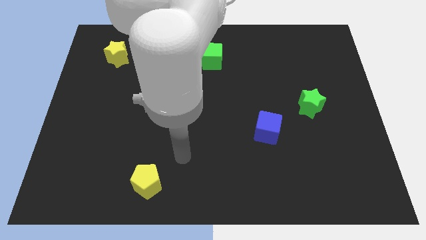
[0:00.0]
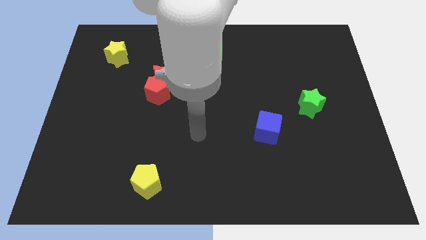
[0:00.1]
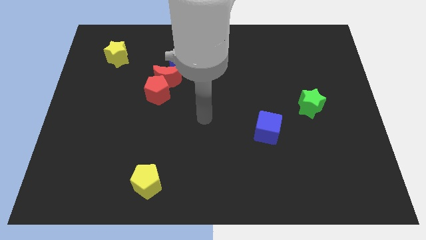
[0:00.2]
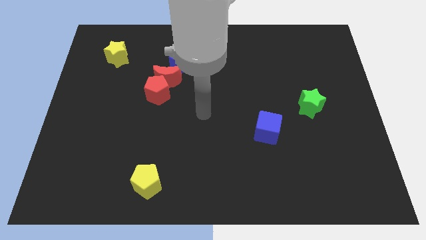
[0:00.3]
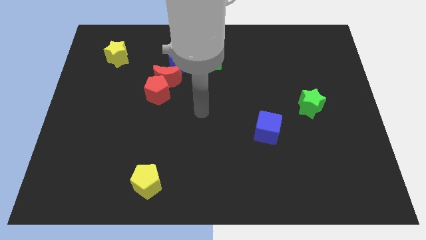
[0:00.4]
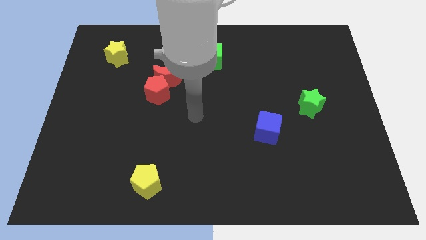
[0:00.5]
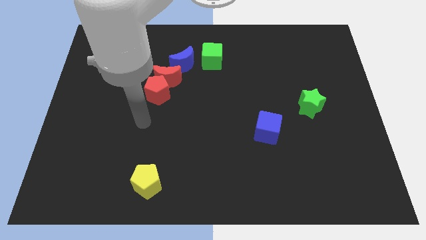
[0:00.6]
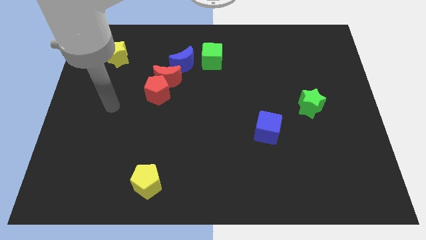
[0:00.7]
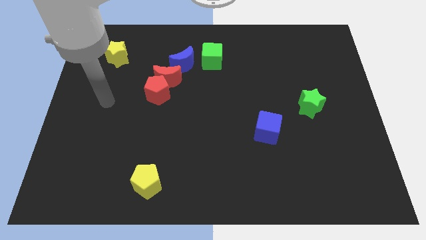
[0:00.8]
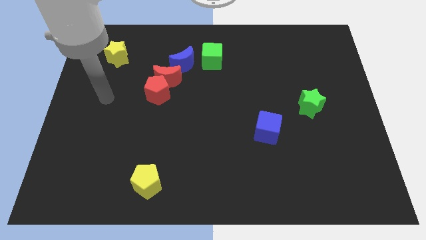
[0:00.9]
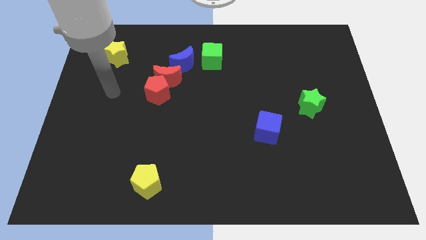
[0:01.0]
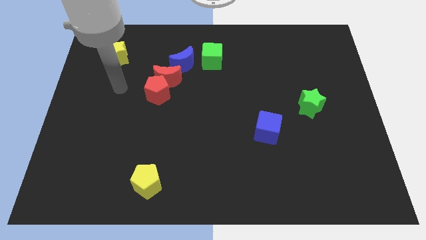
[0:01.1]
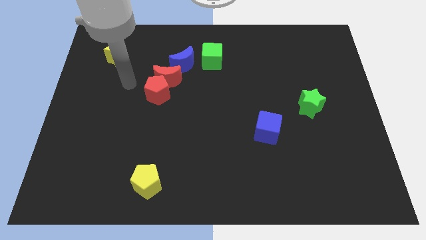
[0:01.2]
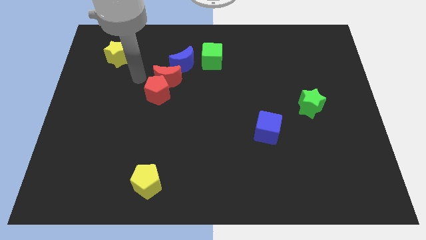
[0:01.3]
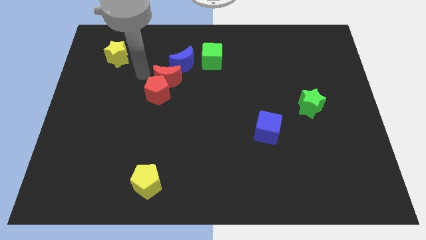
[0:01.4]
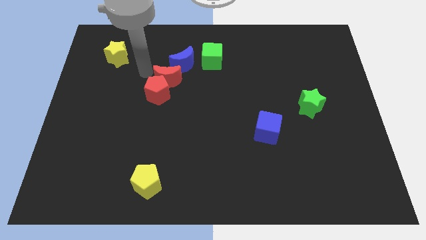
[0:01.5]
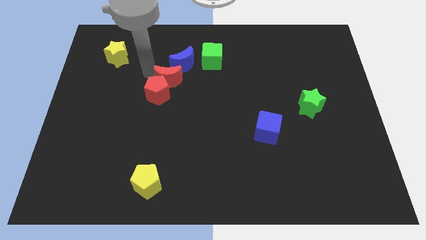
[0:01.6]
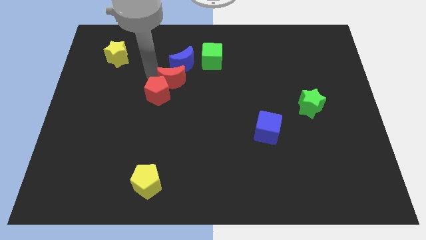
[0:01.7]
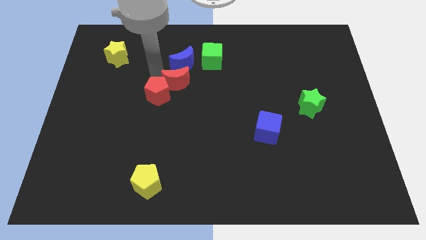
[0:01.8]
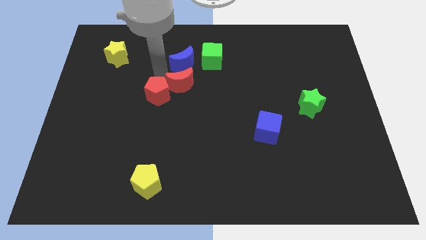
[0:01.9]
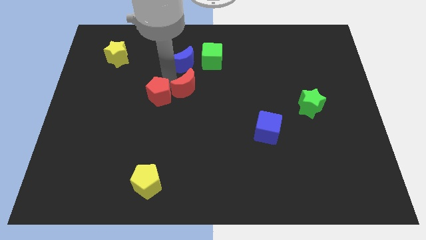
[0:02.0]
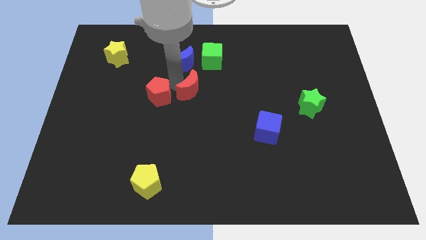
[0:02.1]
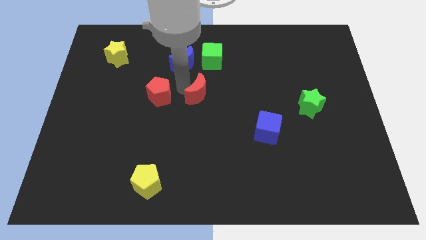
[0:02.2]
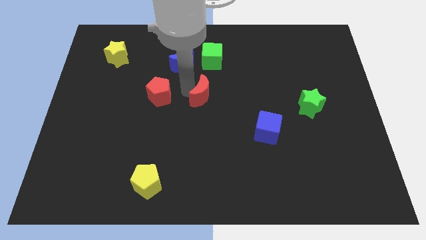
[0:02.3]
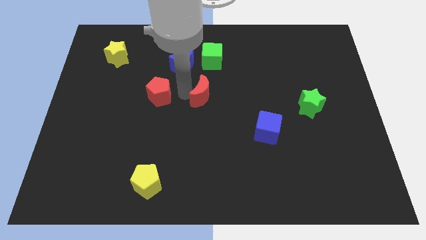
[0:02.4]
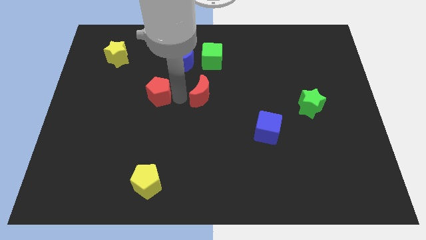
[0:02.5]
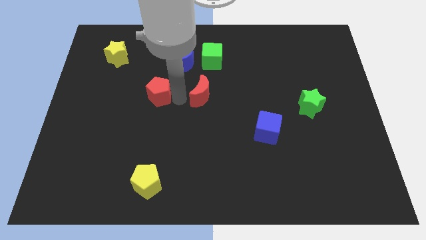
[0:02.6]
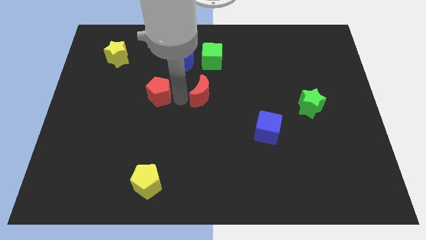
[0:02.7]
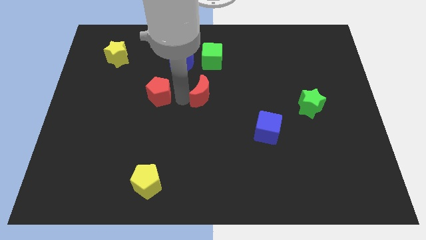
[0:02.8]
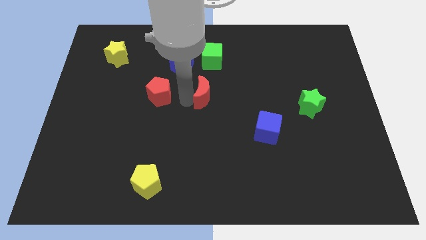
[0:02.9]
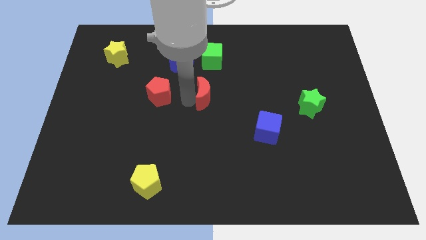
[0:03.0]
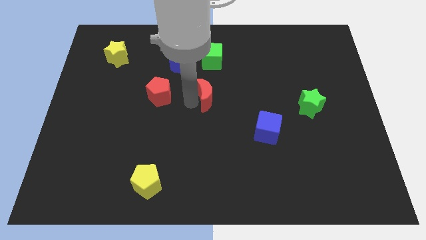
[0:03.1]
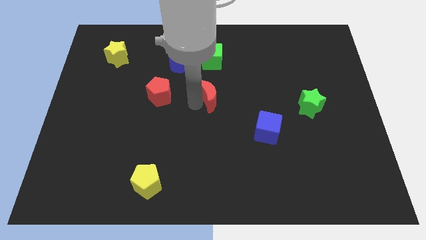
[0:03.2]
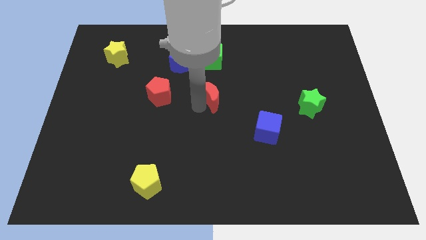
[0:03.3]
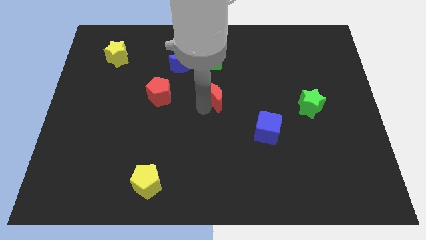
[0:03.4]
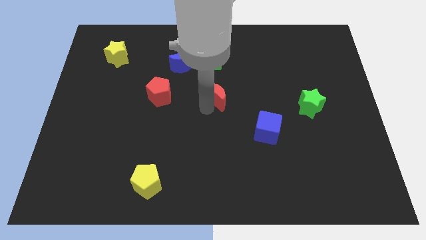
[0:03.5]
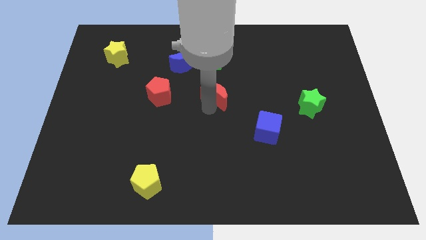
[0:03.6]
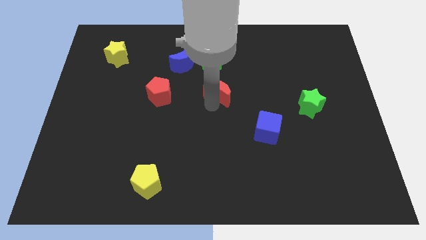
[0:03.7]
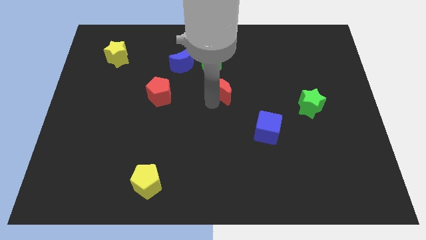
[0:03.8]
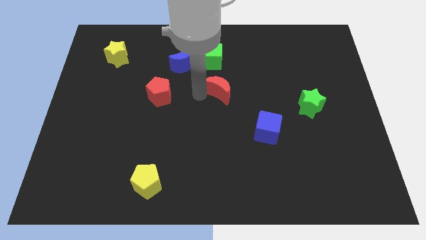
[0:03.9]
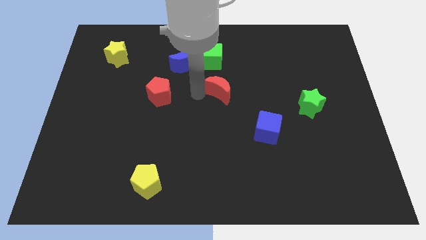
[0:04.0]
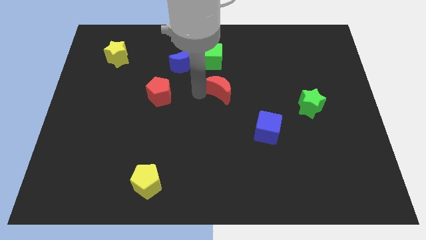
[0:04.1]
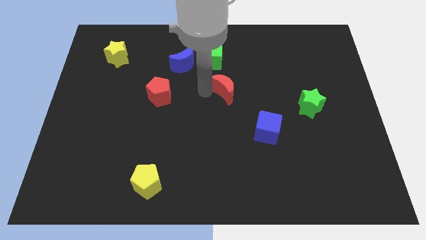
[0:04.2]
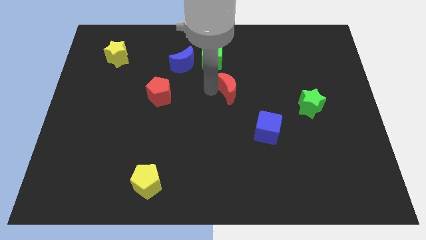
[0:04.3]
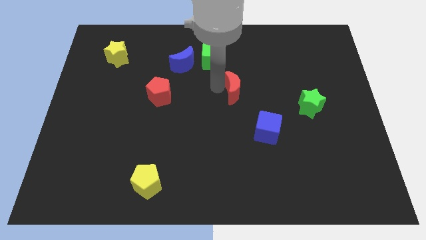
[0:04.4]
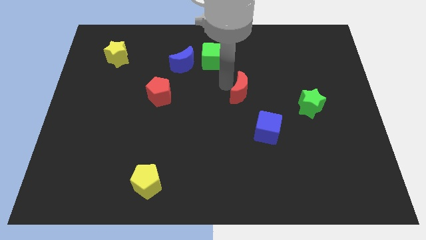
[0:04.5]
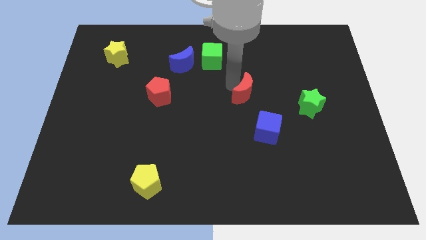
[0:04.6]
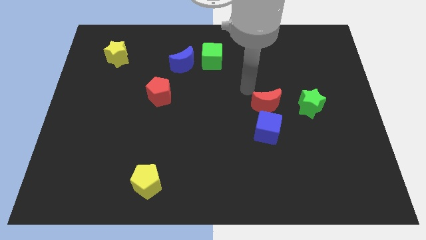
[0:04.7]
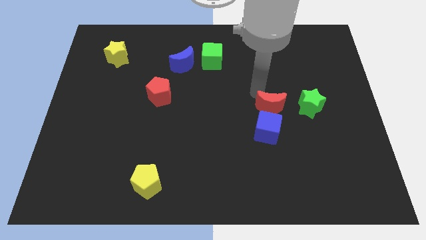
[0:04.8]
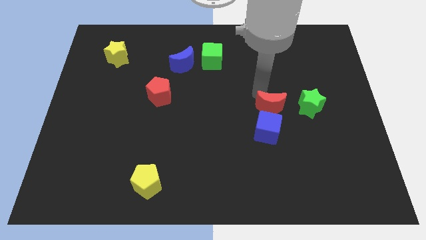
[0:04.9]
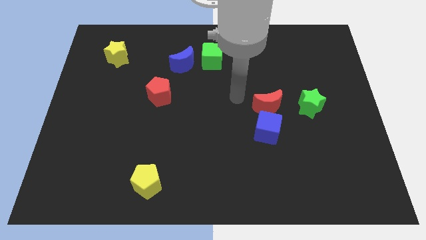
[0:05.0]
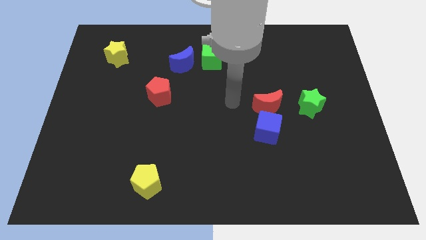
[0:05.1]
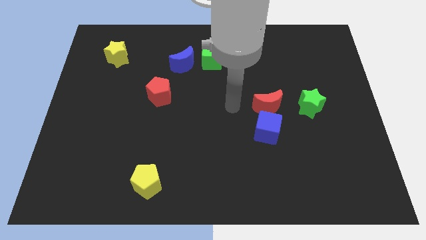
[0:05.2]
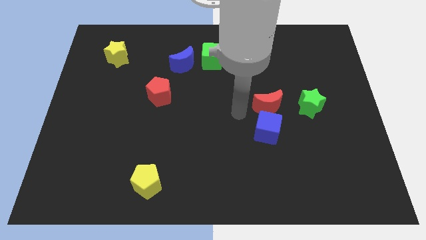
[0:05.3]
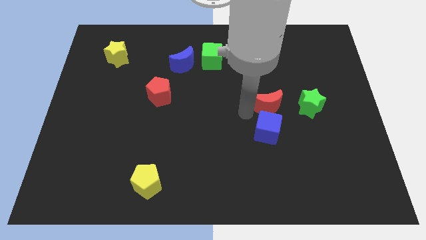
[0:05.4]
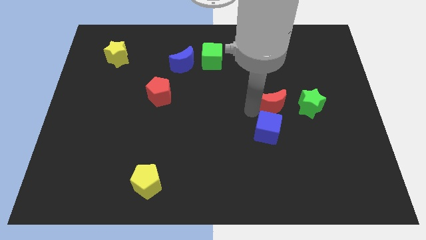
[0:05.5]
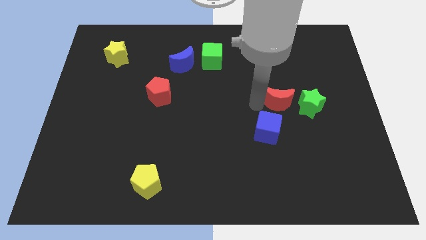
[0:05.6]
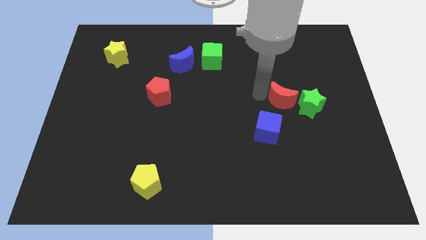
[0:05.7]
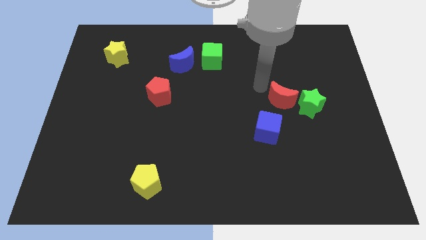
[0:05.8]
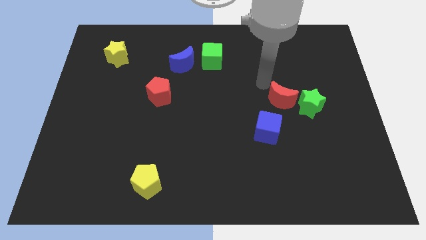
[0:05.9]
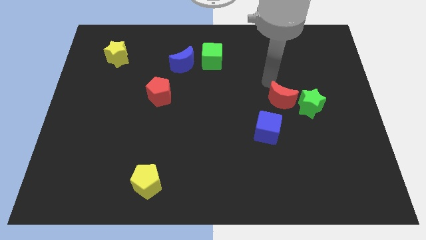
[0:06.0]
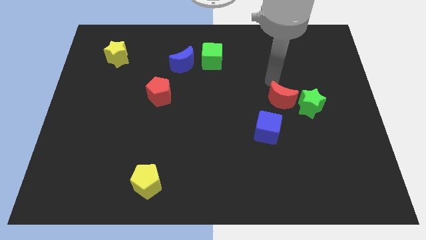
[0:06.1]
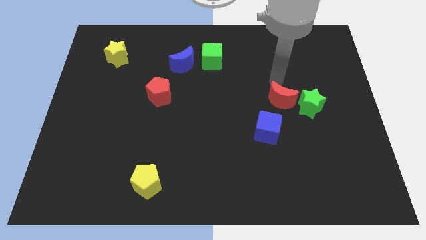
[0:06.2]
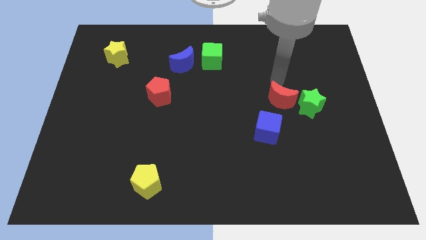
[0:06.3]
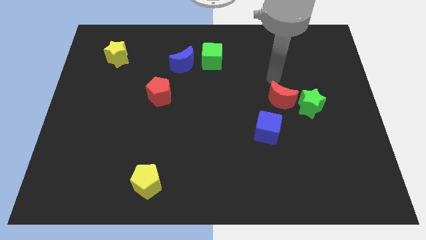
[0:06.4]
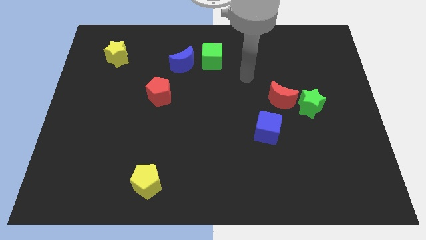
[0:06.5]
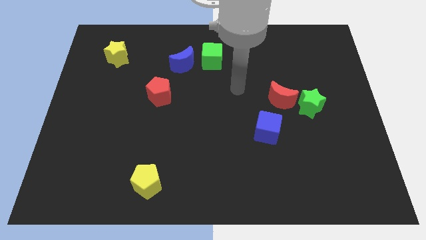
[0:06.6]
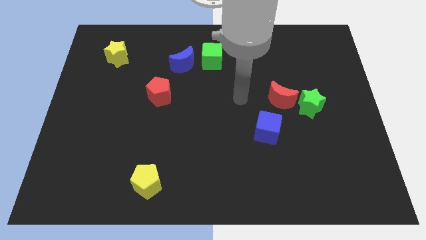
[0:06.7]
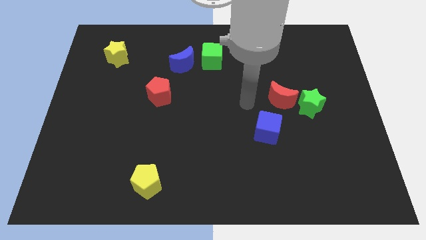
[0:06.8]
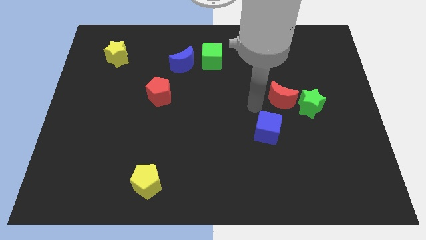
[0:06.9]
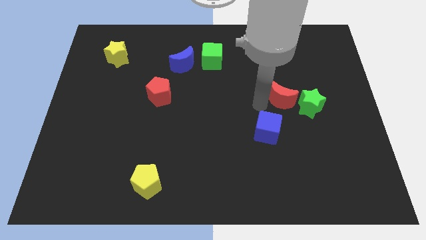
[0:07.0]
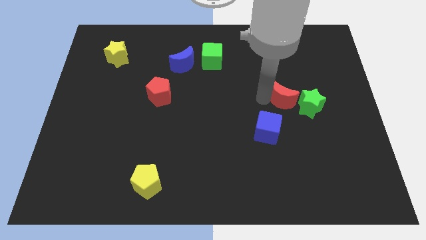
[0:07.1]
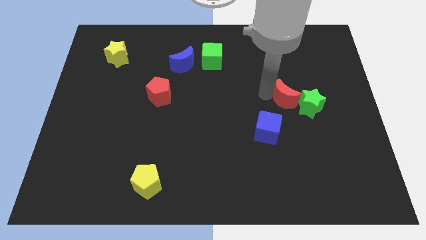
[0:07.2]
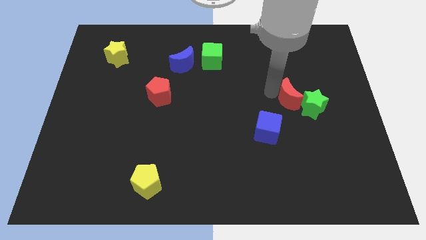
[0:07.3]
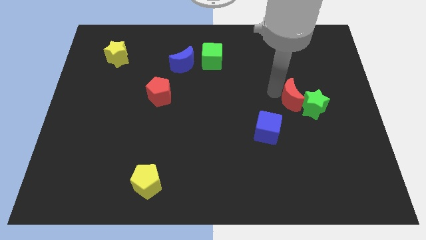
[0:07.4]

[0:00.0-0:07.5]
slide the red moon close to the green star
